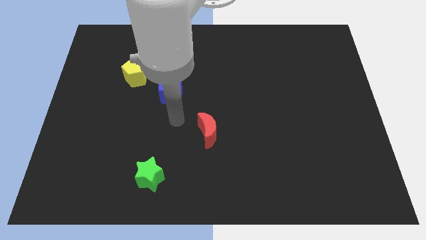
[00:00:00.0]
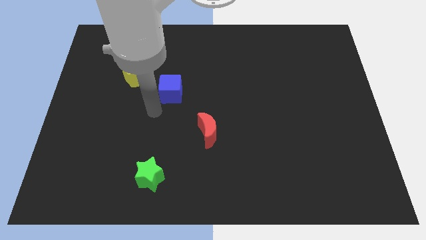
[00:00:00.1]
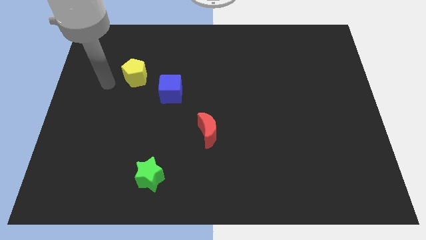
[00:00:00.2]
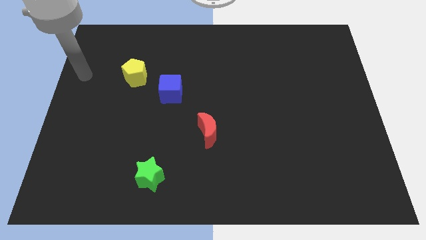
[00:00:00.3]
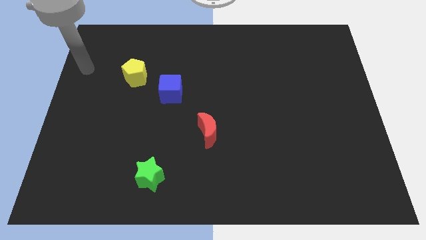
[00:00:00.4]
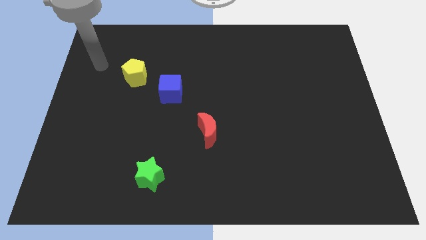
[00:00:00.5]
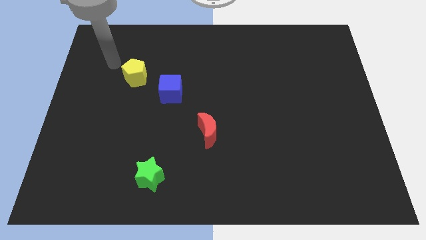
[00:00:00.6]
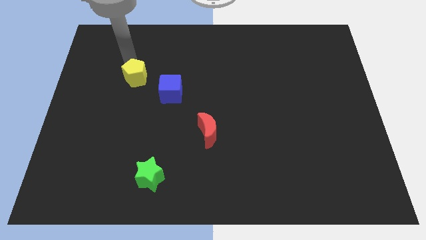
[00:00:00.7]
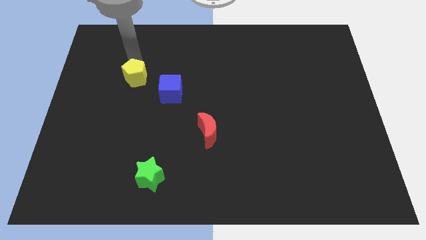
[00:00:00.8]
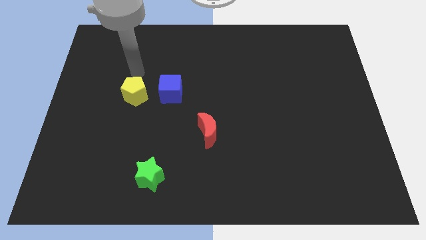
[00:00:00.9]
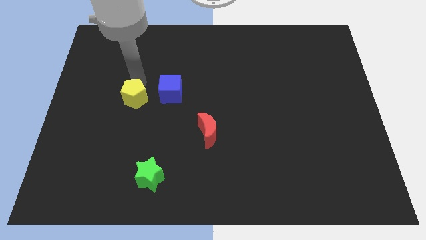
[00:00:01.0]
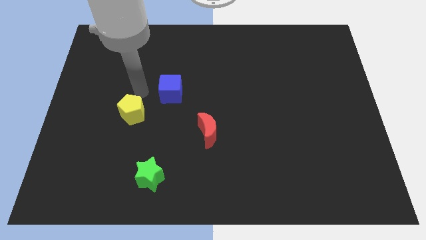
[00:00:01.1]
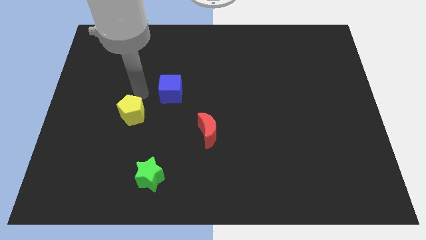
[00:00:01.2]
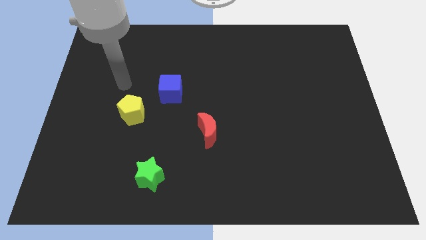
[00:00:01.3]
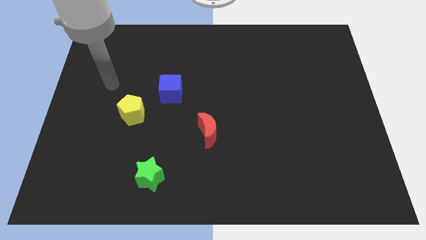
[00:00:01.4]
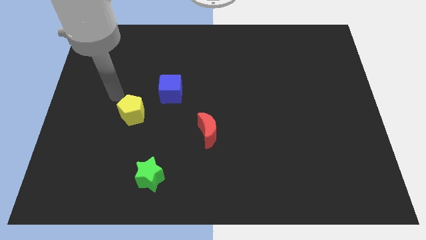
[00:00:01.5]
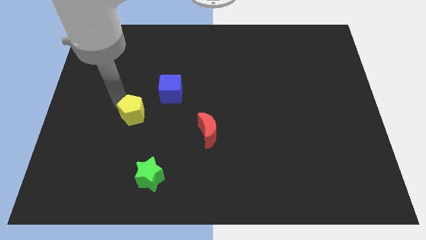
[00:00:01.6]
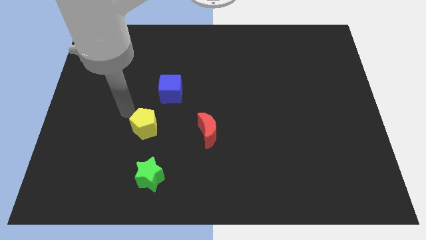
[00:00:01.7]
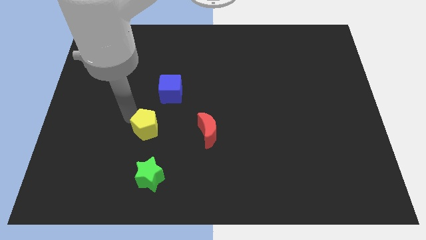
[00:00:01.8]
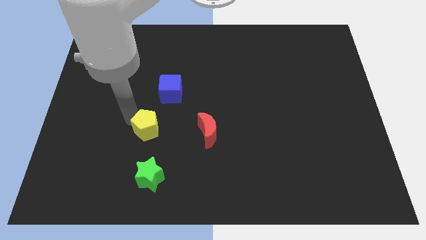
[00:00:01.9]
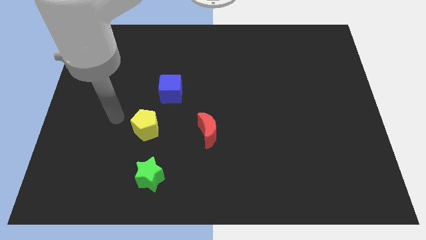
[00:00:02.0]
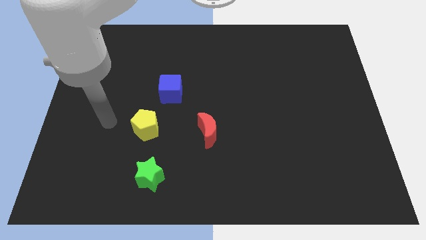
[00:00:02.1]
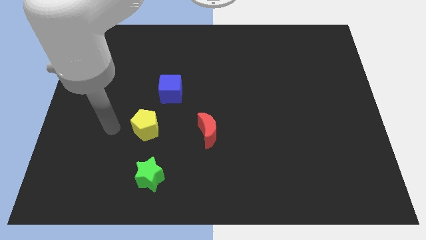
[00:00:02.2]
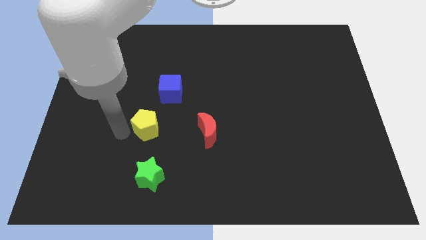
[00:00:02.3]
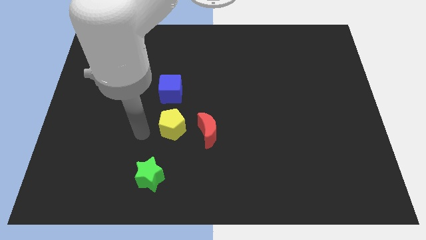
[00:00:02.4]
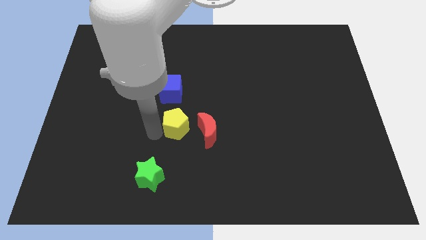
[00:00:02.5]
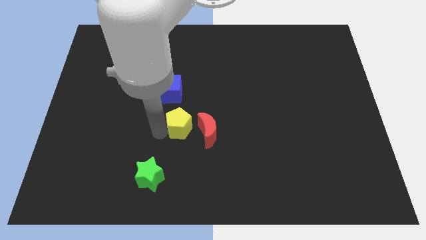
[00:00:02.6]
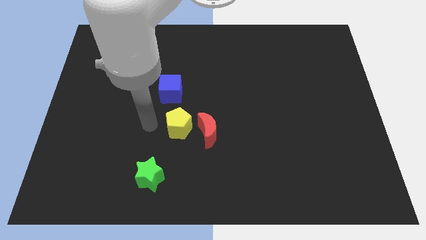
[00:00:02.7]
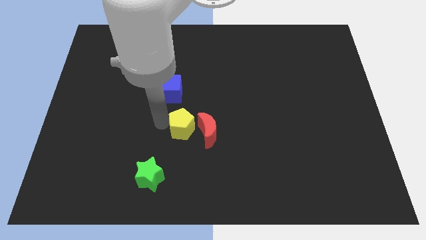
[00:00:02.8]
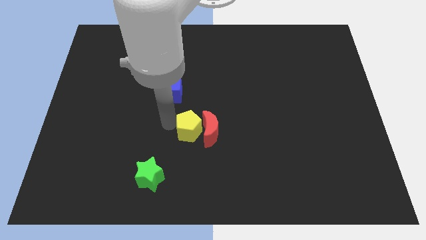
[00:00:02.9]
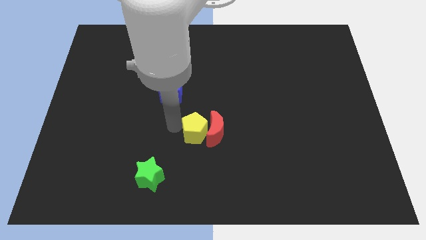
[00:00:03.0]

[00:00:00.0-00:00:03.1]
put the yellow pentagon towards the red block

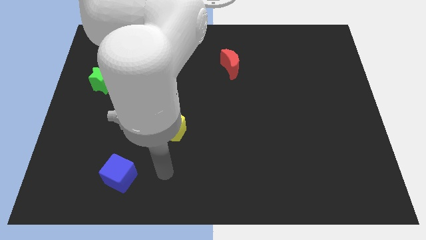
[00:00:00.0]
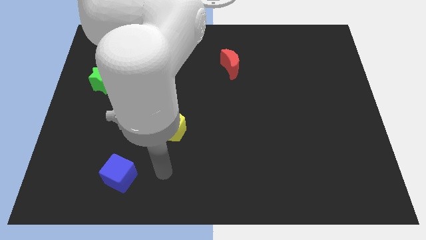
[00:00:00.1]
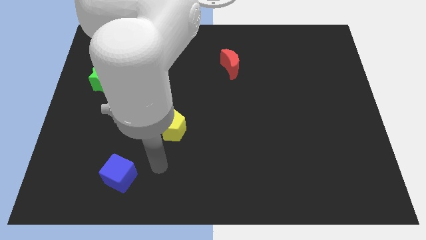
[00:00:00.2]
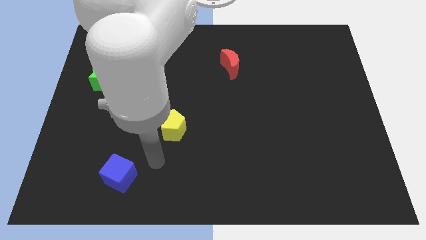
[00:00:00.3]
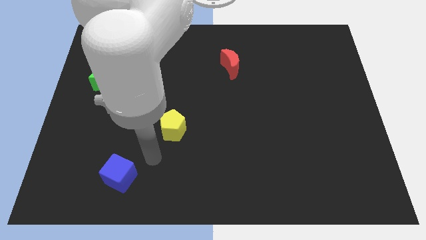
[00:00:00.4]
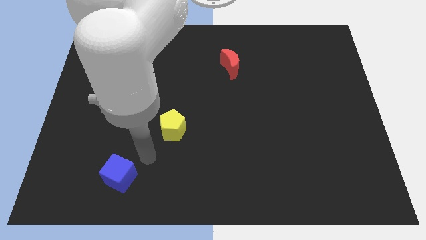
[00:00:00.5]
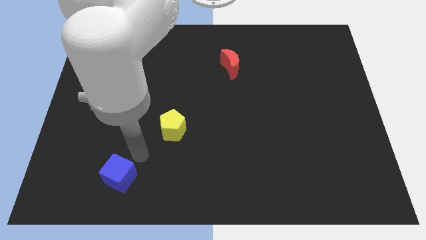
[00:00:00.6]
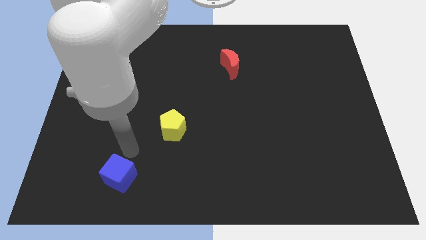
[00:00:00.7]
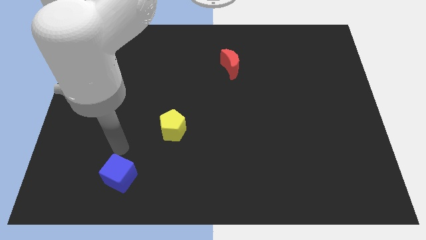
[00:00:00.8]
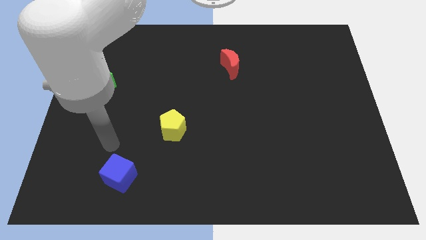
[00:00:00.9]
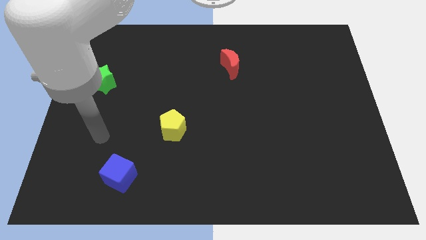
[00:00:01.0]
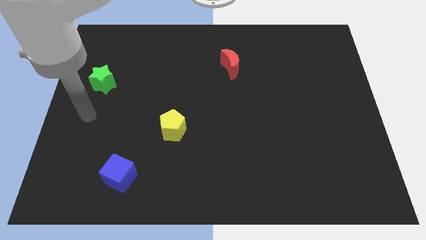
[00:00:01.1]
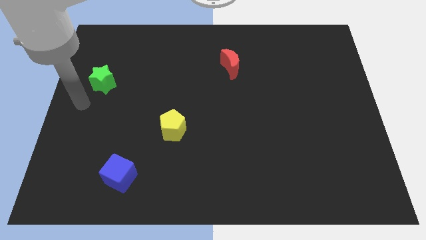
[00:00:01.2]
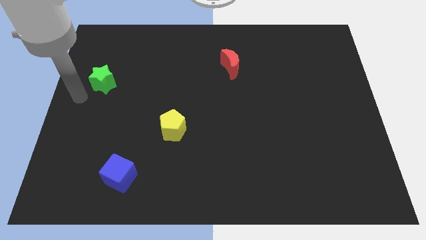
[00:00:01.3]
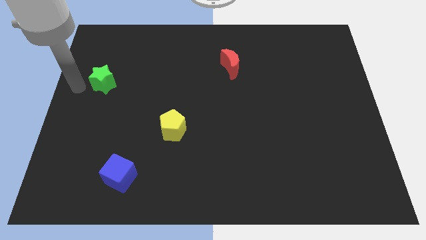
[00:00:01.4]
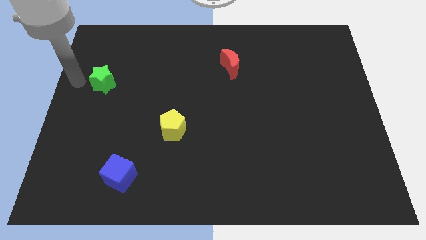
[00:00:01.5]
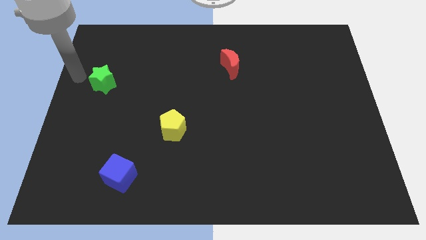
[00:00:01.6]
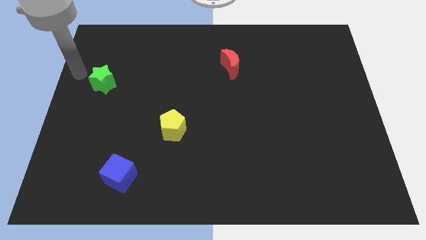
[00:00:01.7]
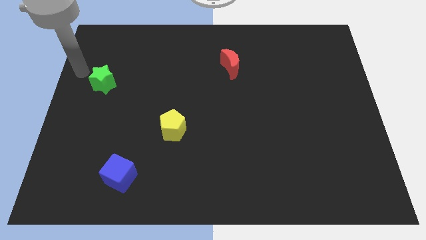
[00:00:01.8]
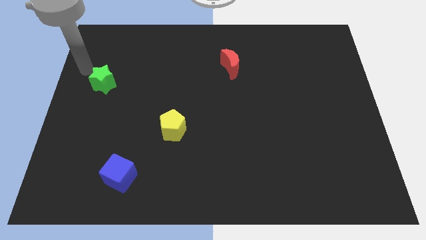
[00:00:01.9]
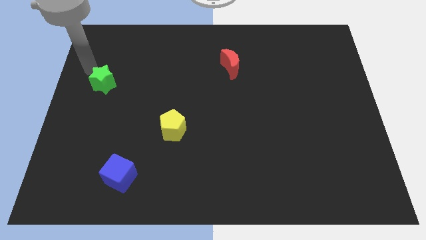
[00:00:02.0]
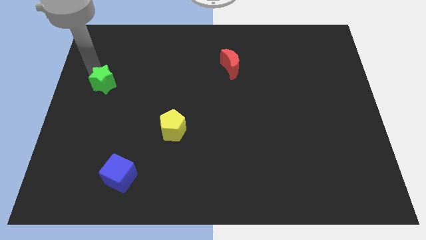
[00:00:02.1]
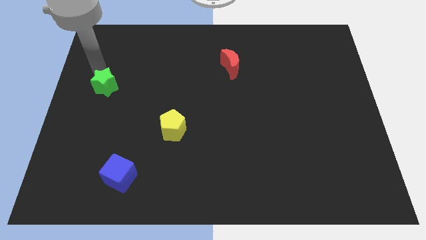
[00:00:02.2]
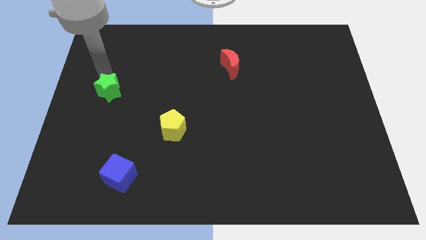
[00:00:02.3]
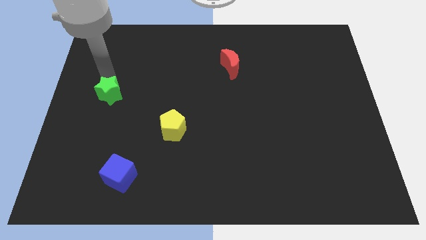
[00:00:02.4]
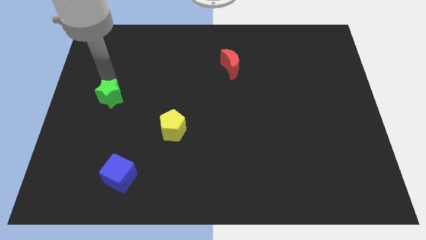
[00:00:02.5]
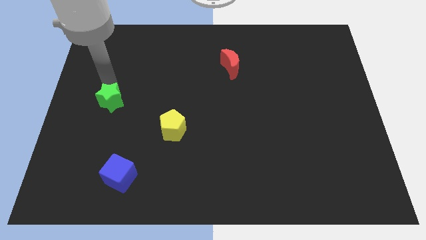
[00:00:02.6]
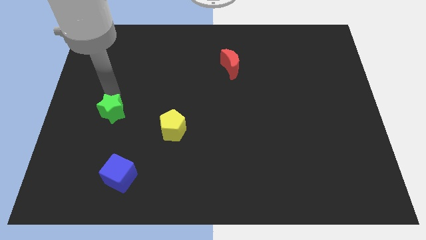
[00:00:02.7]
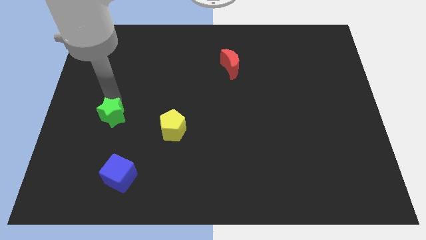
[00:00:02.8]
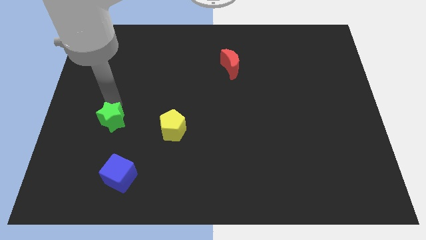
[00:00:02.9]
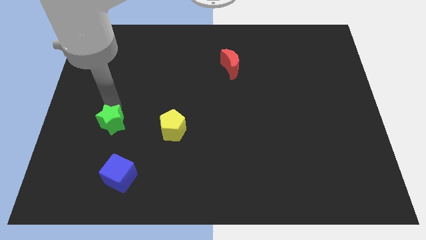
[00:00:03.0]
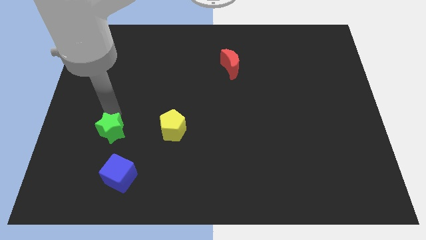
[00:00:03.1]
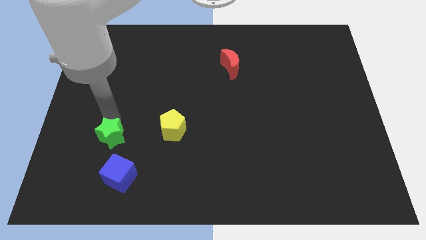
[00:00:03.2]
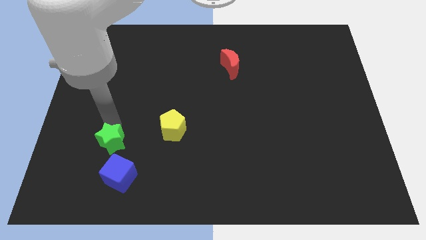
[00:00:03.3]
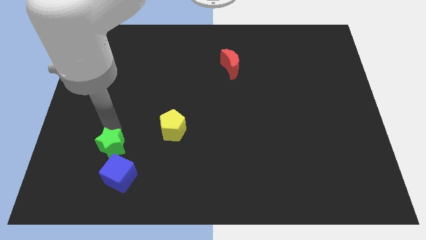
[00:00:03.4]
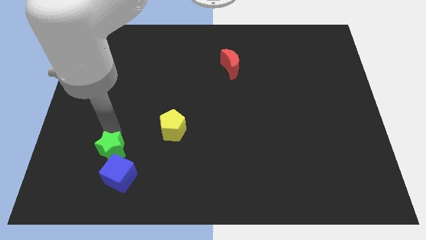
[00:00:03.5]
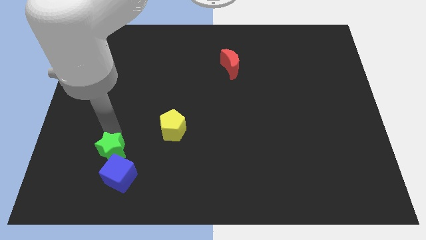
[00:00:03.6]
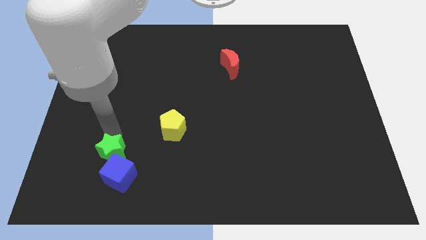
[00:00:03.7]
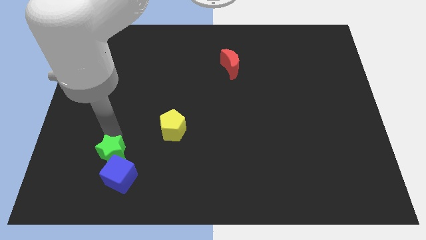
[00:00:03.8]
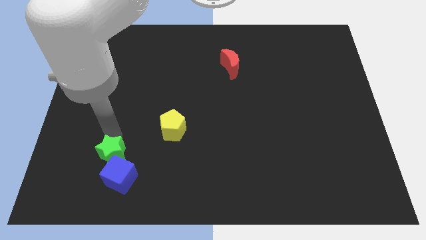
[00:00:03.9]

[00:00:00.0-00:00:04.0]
put the star close to the blue cube

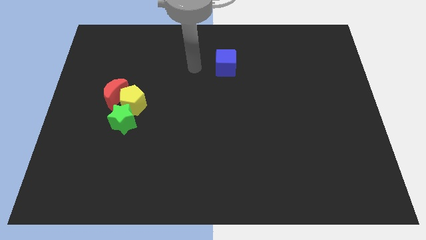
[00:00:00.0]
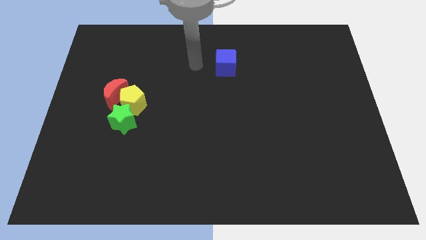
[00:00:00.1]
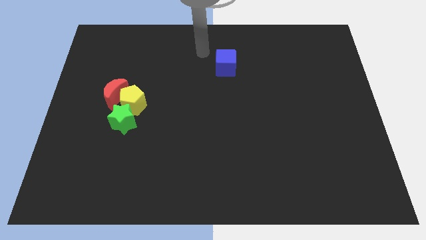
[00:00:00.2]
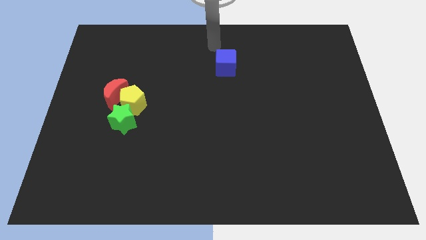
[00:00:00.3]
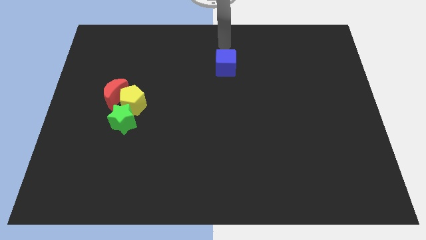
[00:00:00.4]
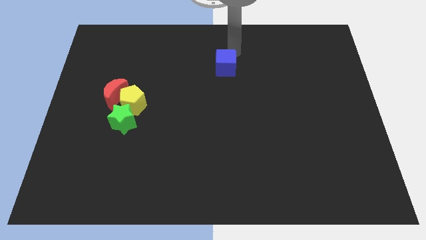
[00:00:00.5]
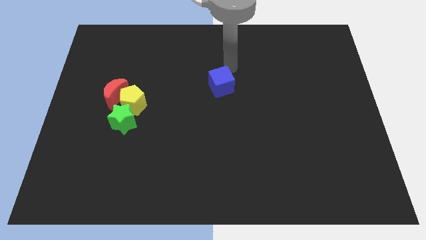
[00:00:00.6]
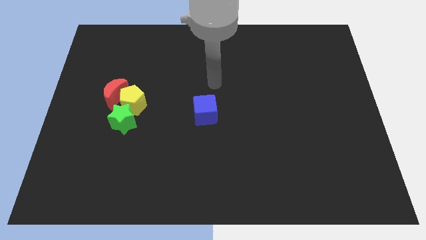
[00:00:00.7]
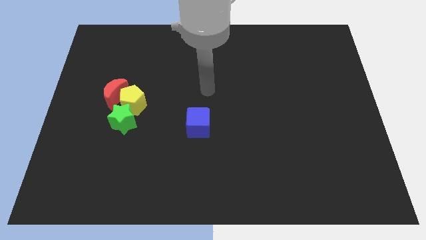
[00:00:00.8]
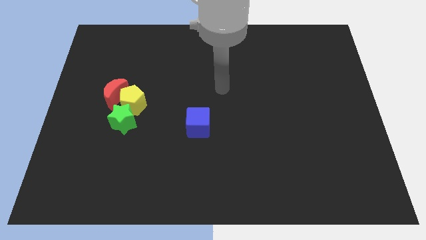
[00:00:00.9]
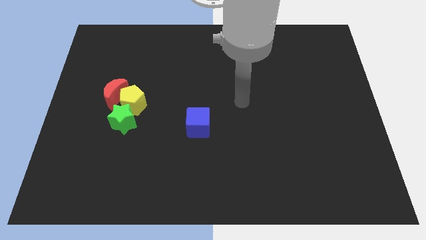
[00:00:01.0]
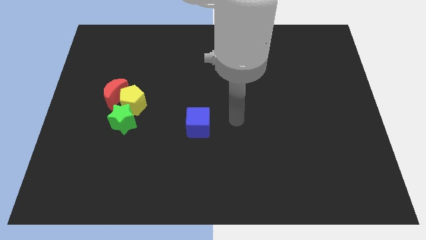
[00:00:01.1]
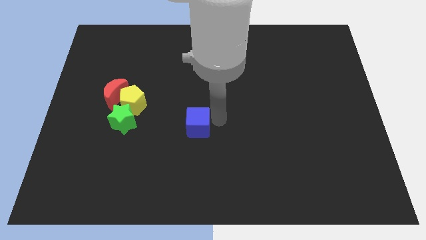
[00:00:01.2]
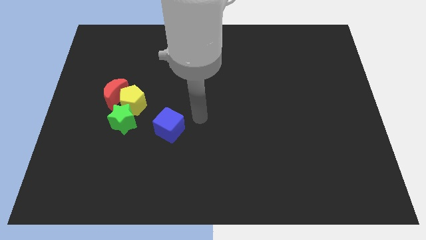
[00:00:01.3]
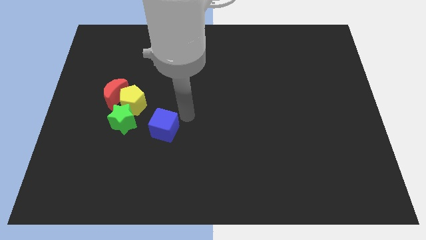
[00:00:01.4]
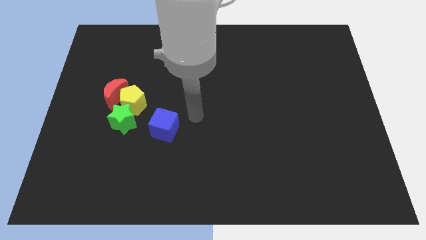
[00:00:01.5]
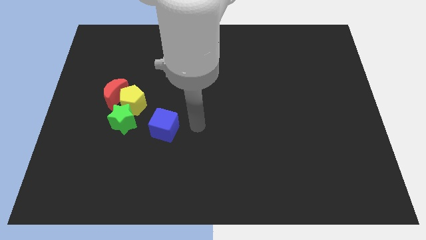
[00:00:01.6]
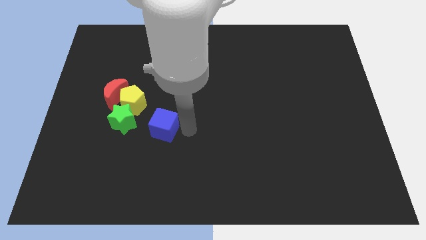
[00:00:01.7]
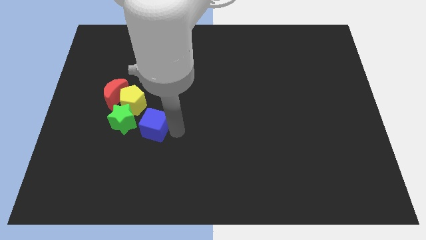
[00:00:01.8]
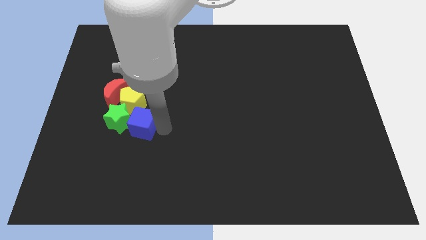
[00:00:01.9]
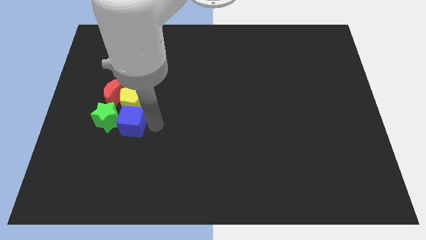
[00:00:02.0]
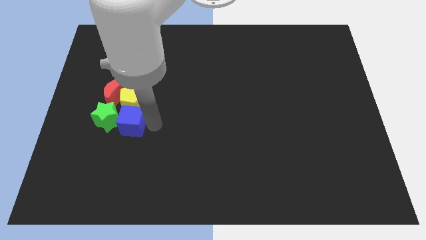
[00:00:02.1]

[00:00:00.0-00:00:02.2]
slide the blue block next to the star
